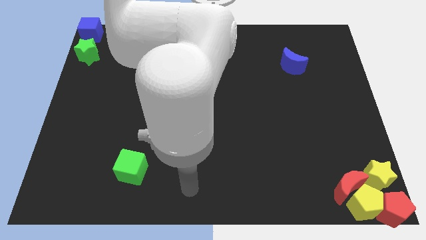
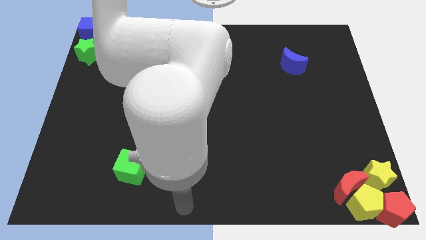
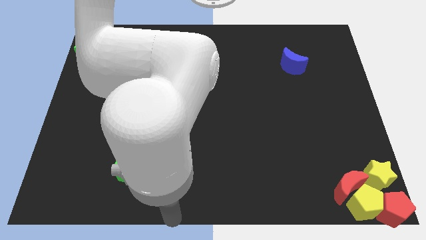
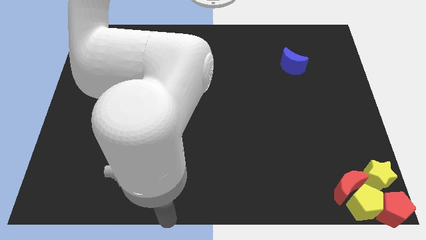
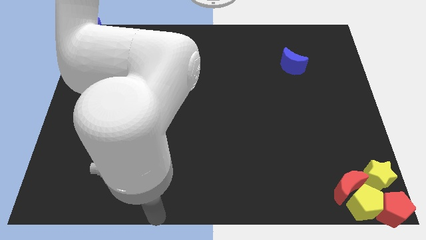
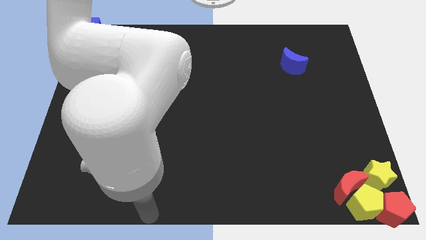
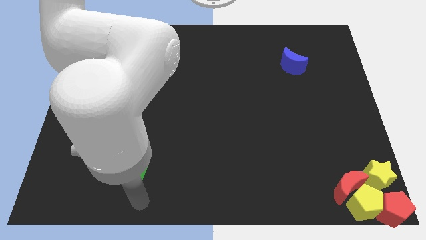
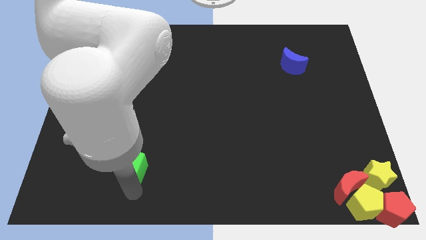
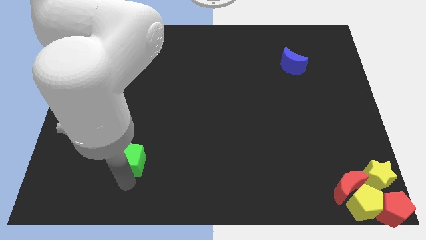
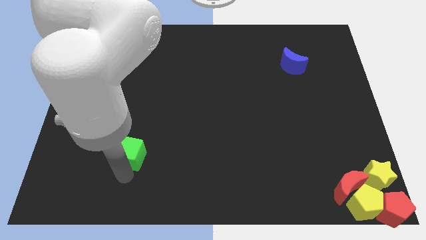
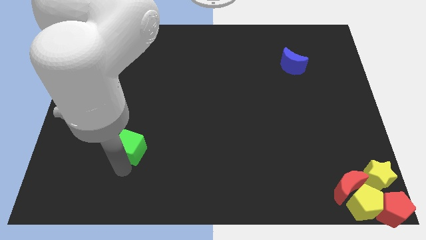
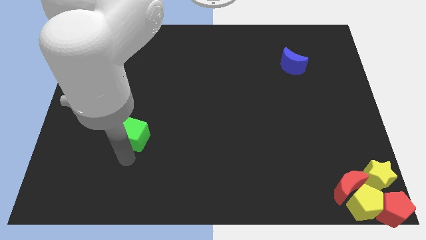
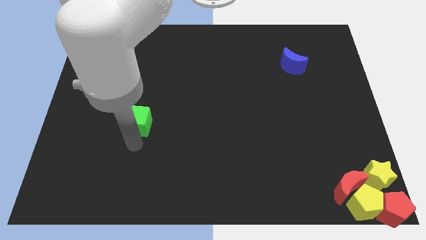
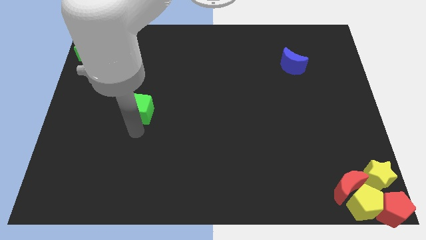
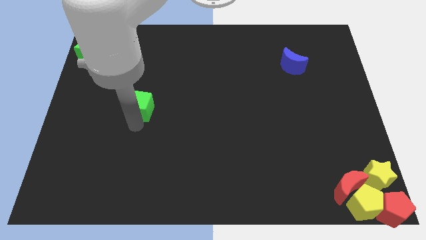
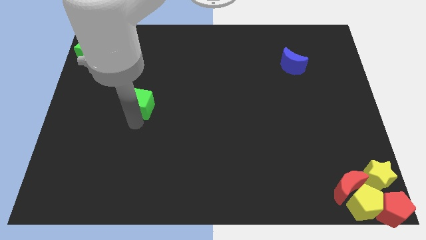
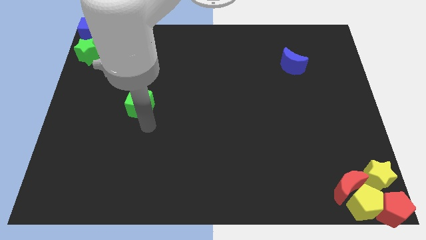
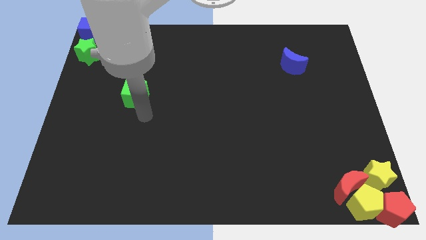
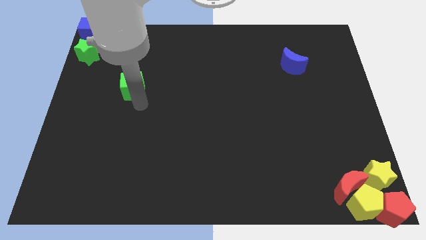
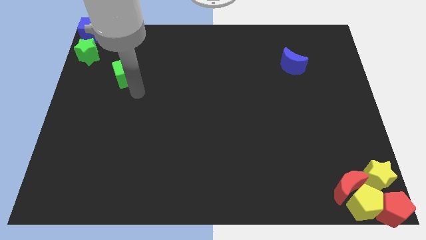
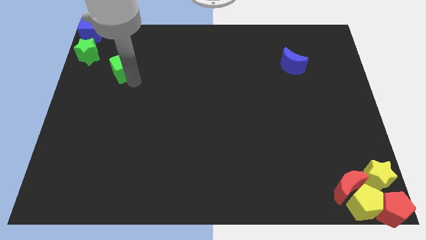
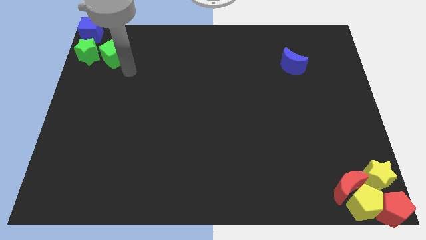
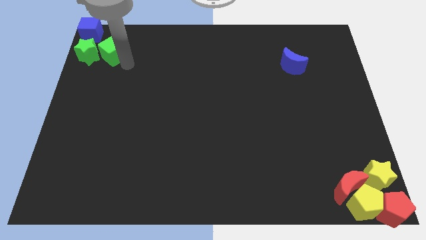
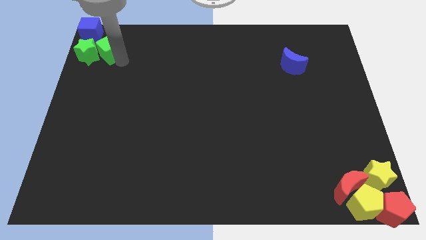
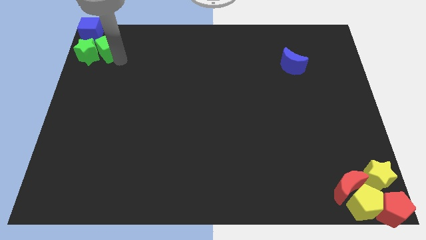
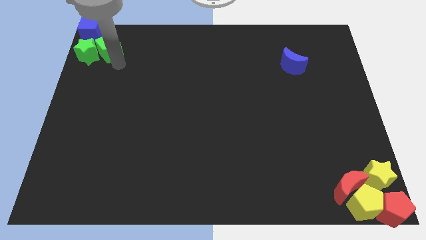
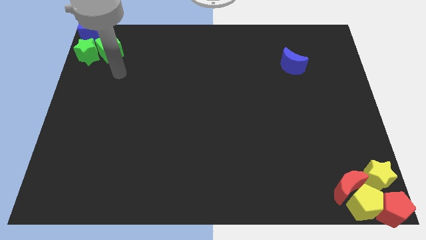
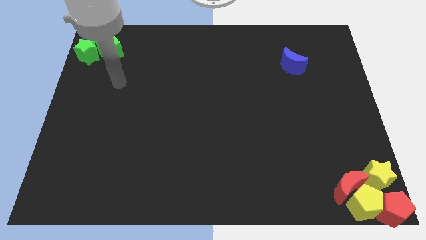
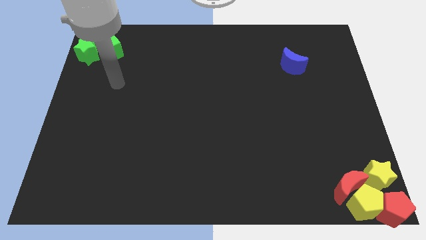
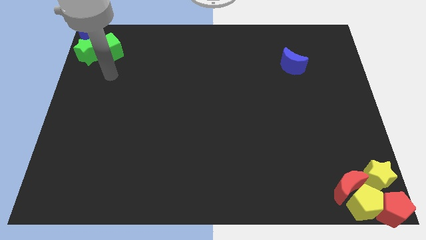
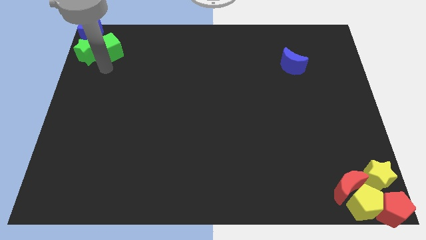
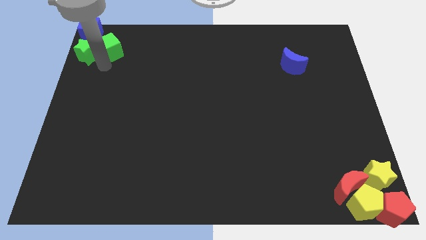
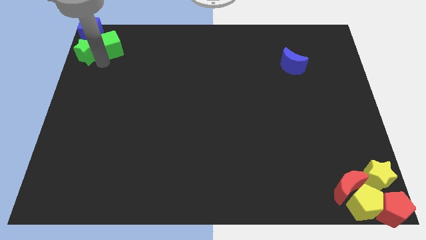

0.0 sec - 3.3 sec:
push the green cube to right of the green star

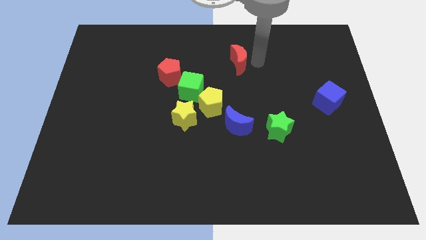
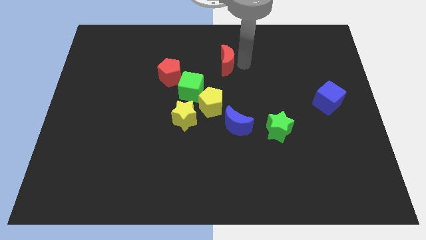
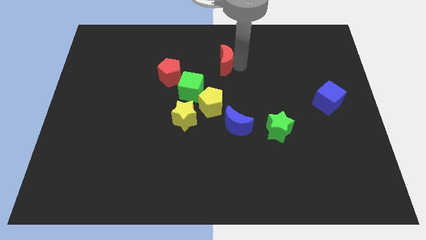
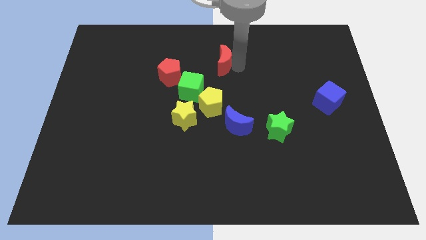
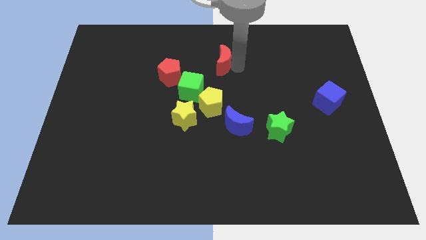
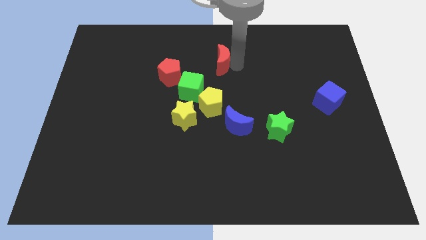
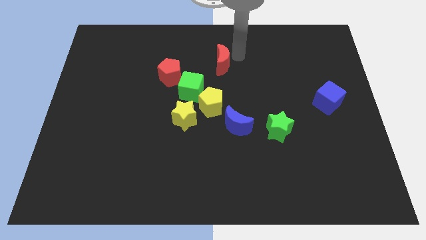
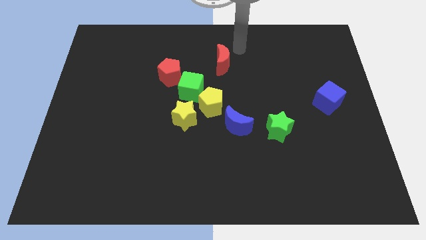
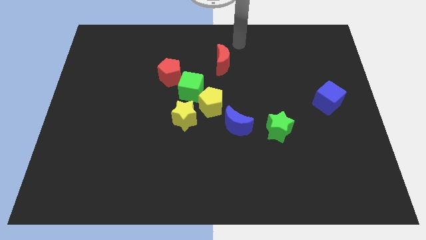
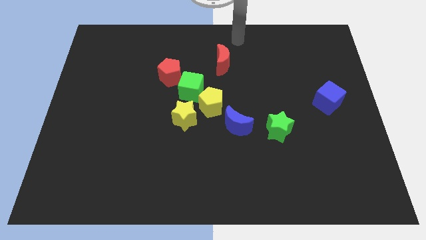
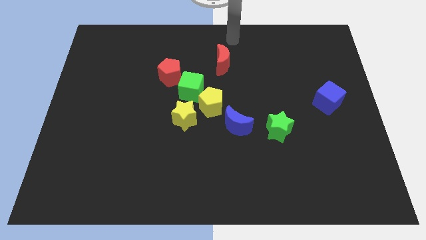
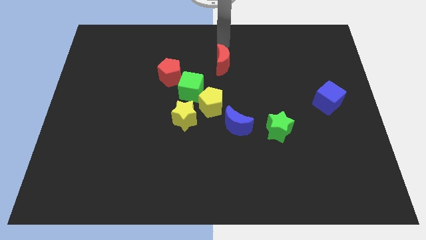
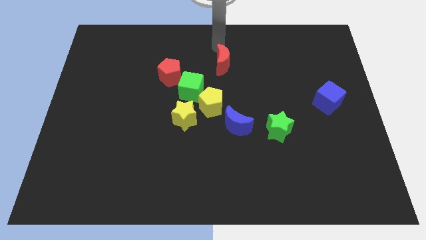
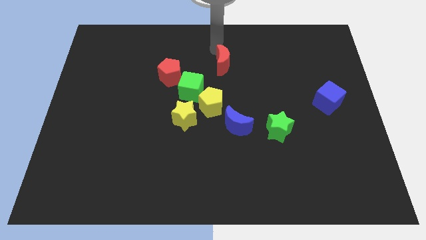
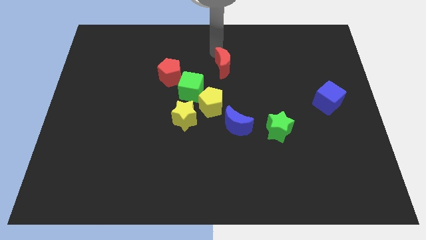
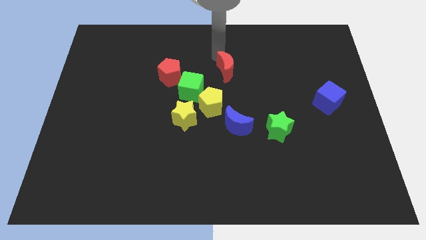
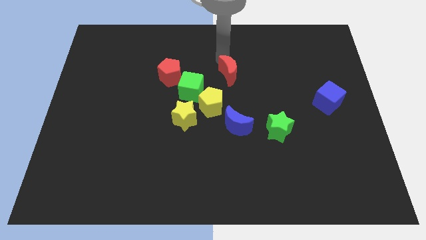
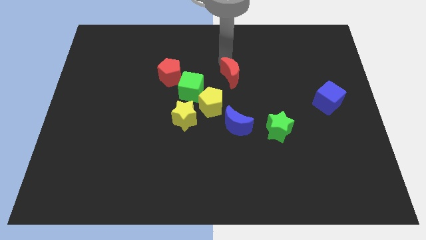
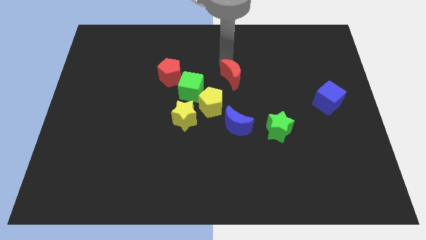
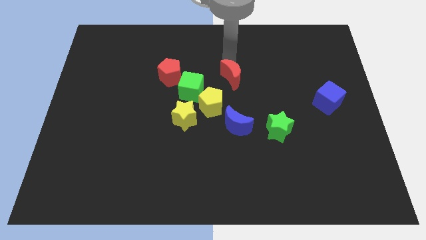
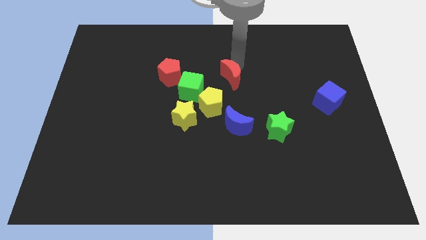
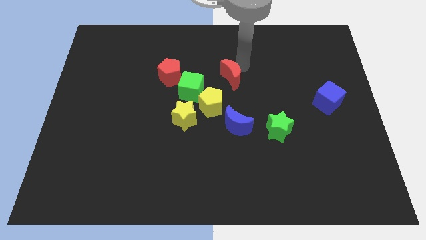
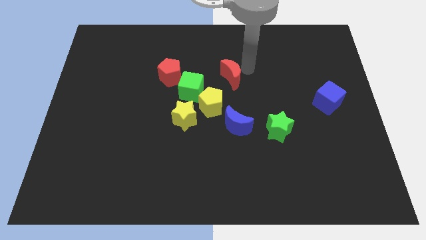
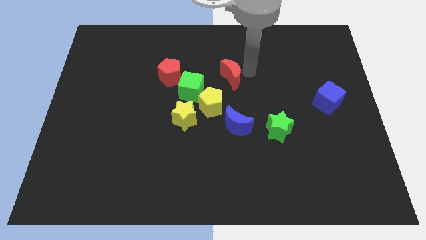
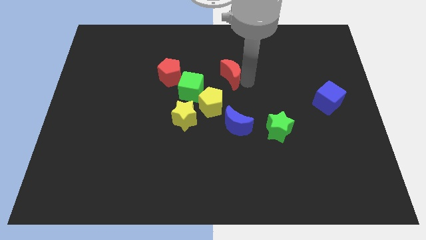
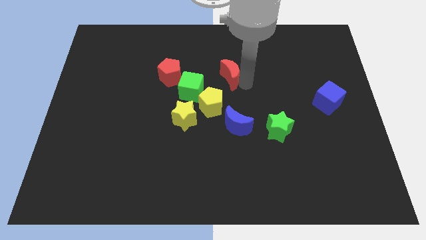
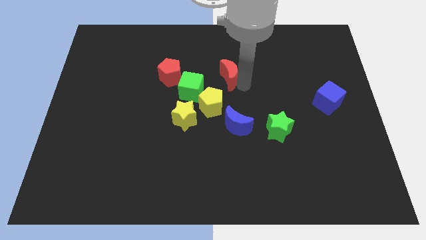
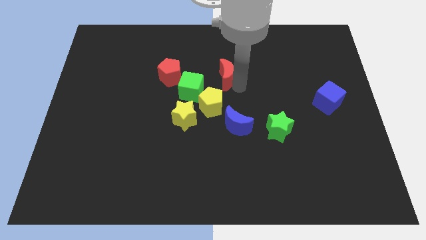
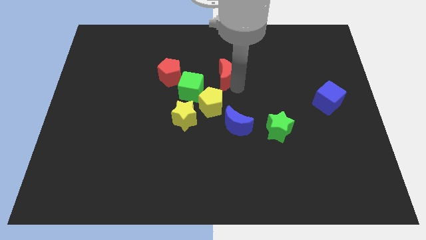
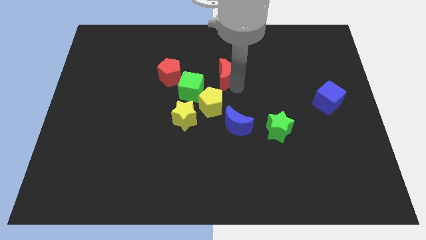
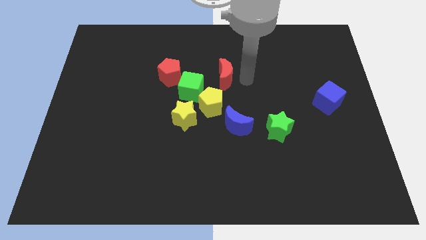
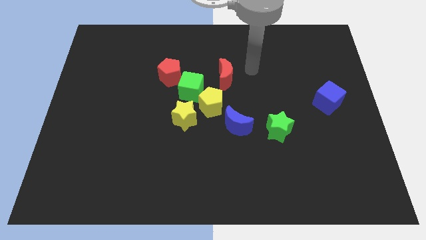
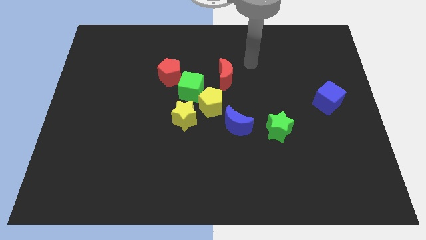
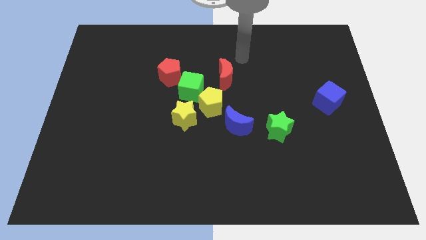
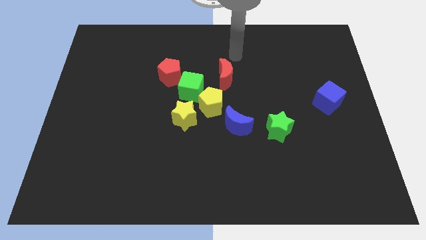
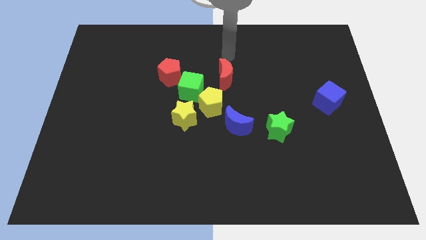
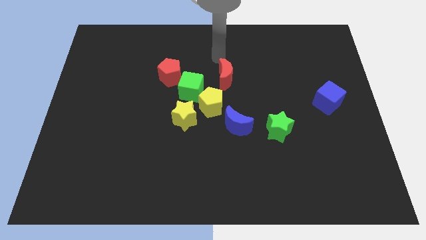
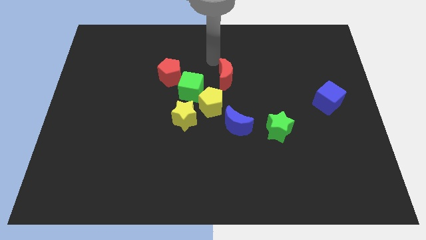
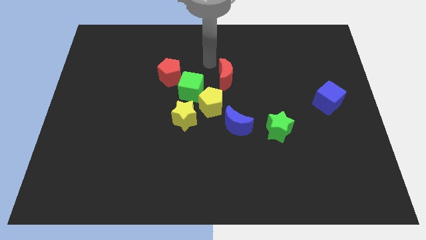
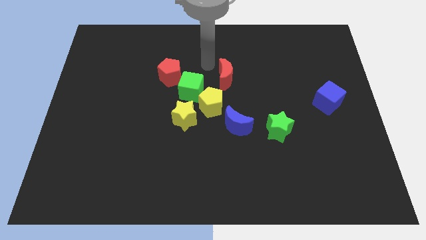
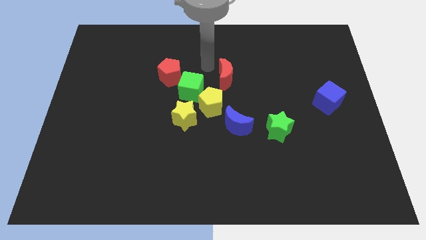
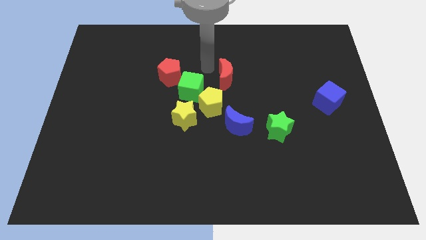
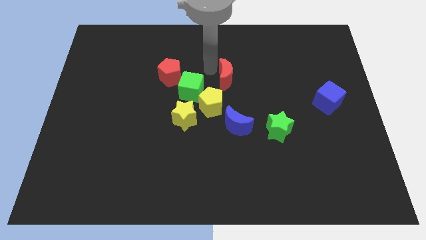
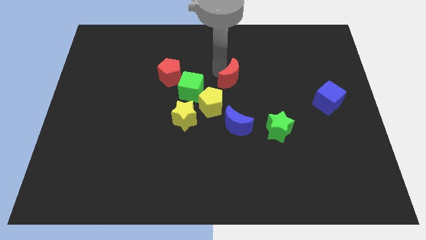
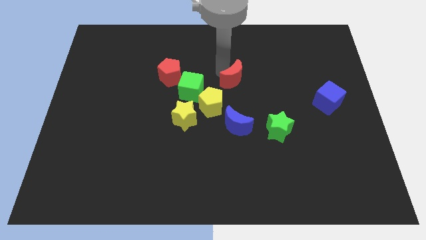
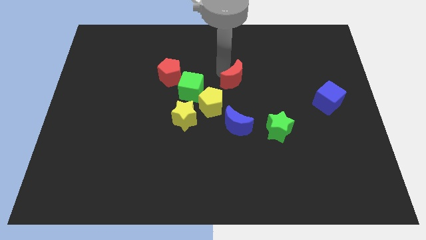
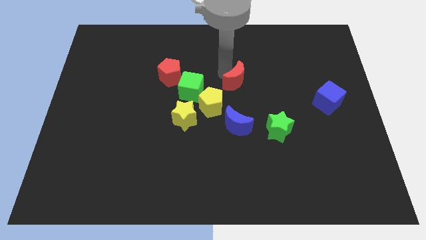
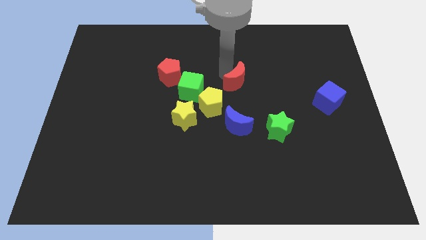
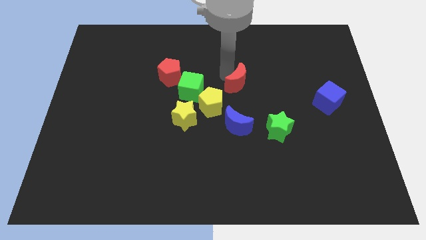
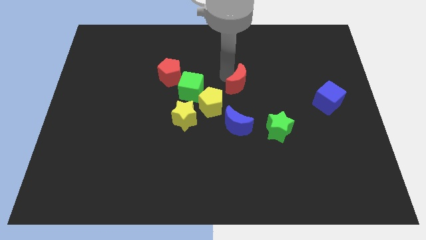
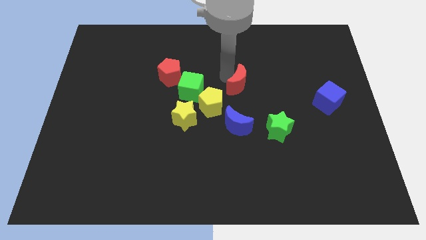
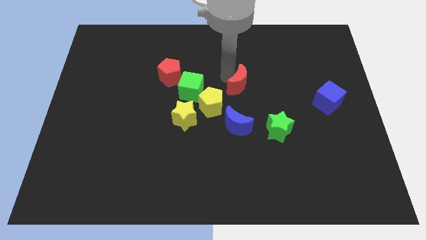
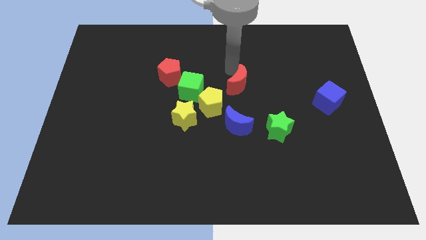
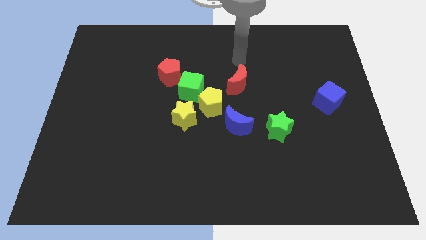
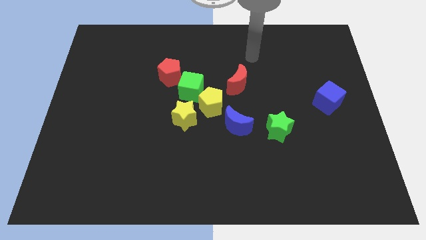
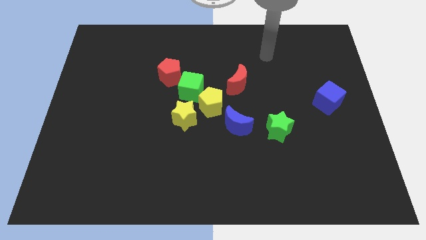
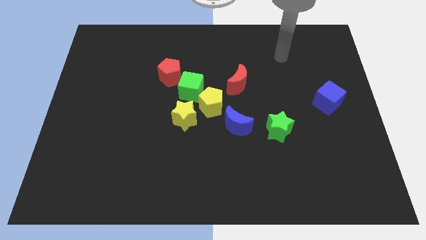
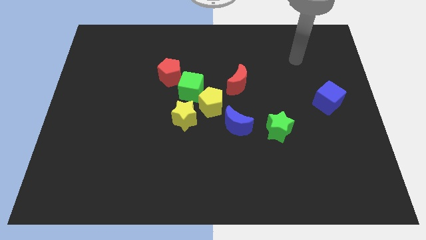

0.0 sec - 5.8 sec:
place the red crescent to the top right of the yellow pentagon
